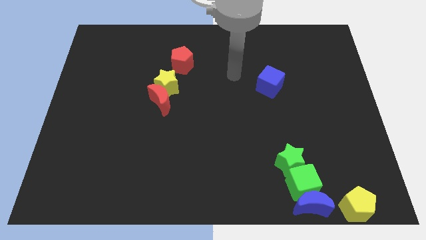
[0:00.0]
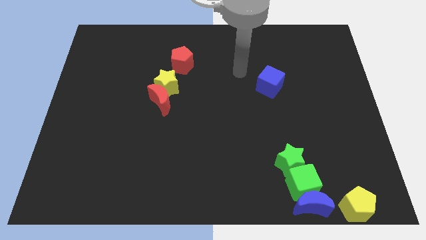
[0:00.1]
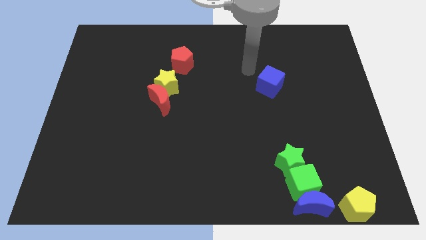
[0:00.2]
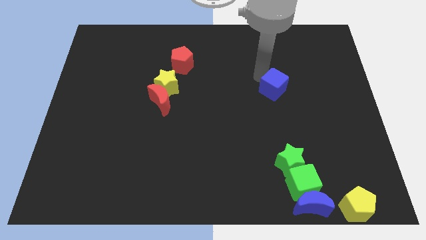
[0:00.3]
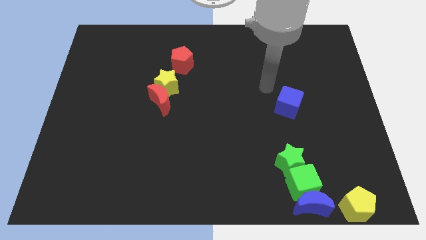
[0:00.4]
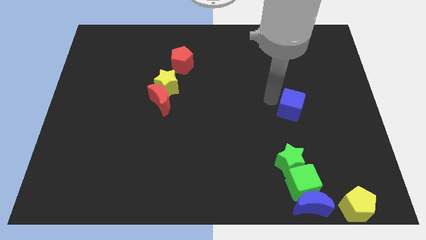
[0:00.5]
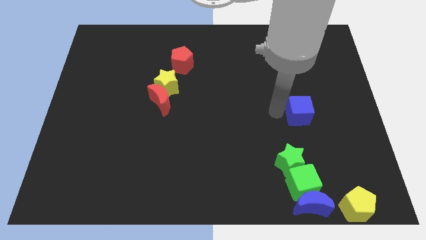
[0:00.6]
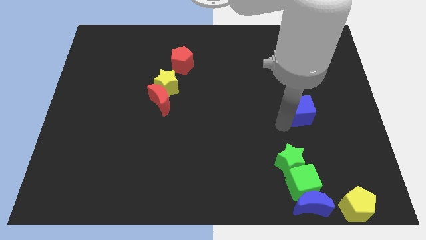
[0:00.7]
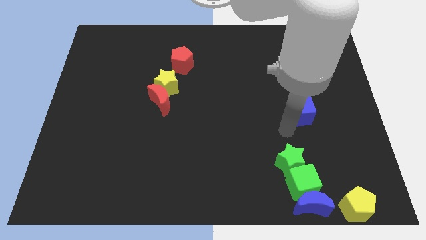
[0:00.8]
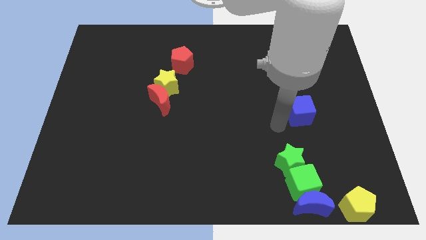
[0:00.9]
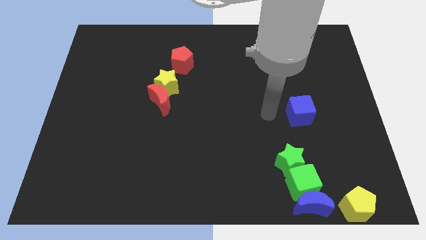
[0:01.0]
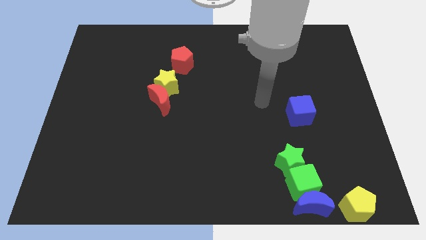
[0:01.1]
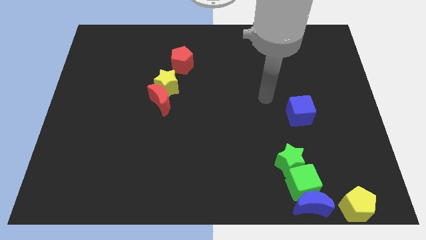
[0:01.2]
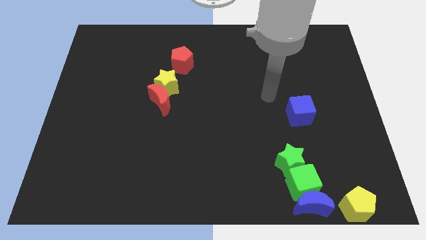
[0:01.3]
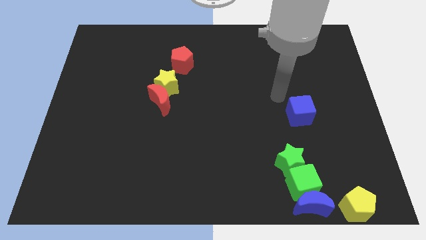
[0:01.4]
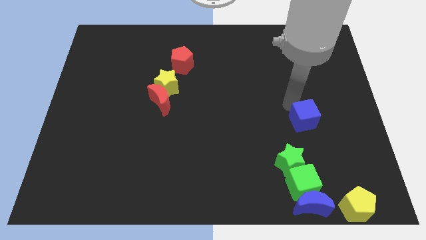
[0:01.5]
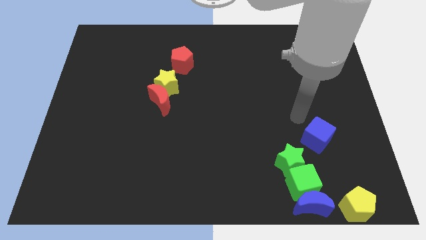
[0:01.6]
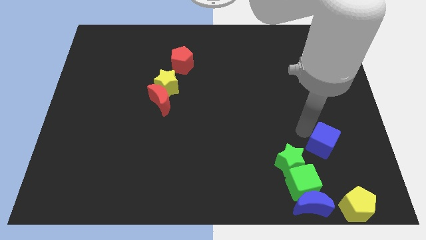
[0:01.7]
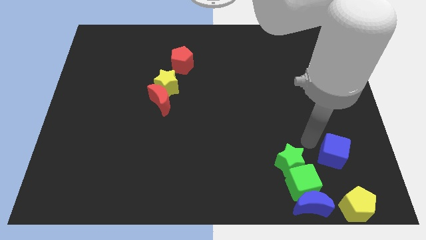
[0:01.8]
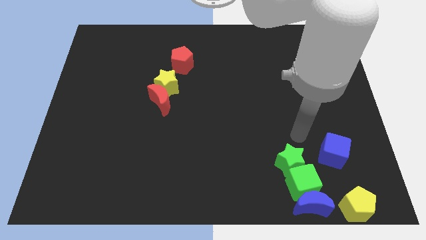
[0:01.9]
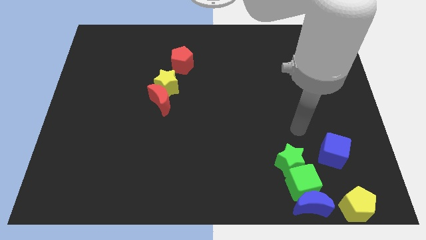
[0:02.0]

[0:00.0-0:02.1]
place the blue cube parallel right to the green star

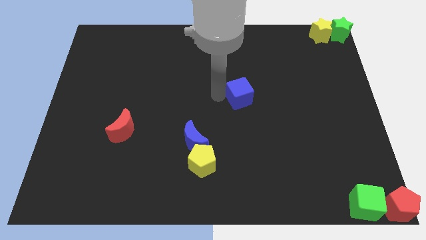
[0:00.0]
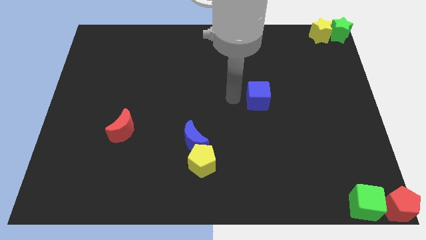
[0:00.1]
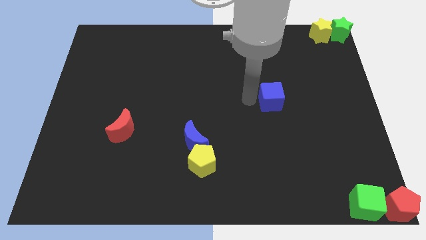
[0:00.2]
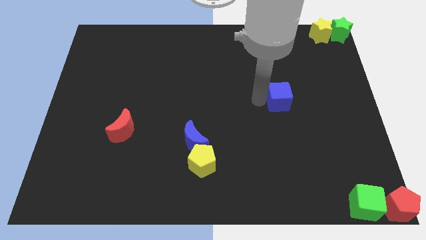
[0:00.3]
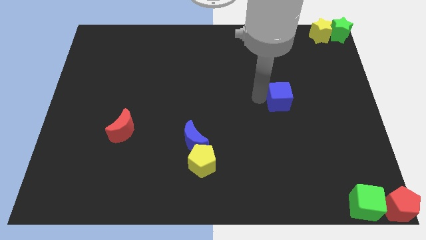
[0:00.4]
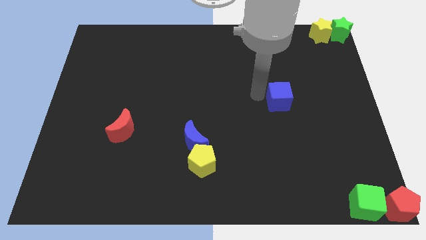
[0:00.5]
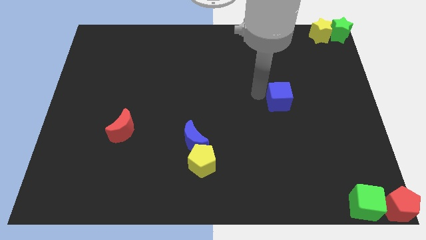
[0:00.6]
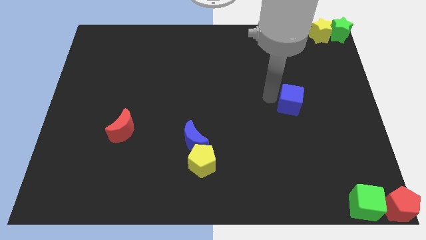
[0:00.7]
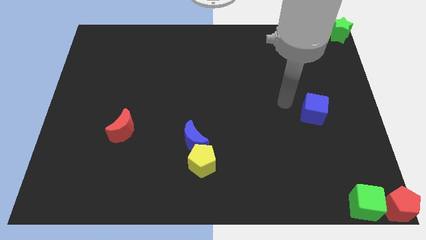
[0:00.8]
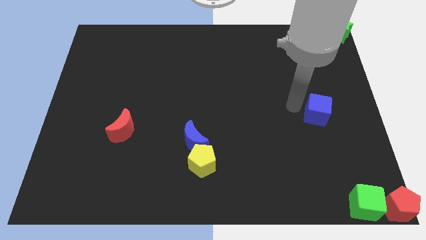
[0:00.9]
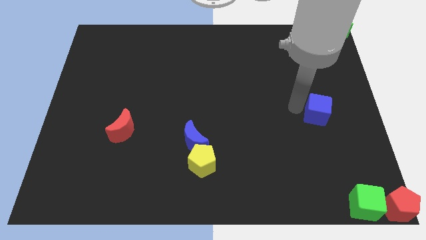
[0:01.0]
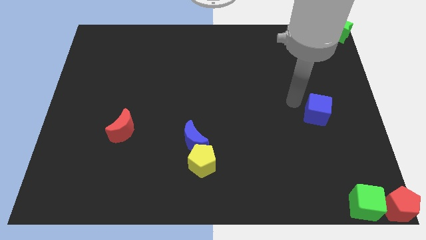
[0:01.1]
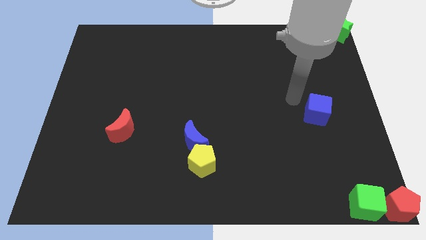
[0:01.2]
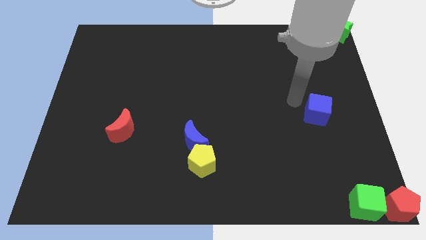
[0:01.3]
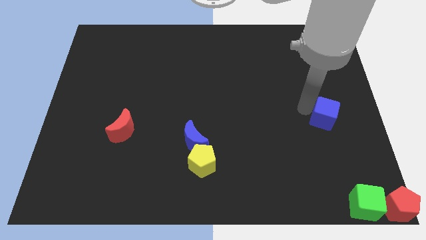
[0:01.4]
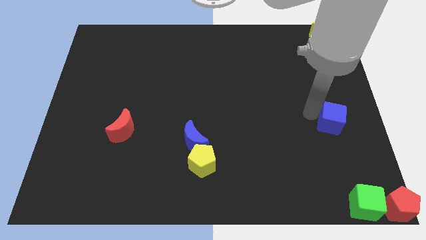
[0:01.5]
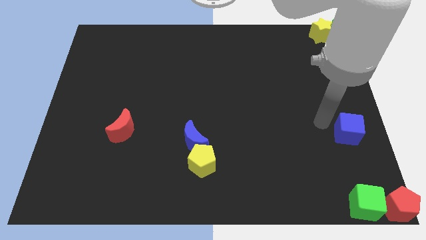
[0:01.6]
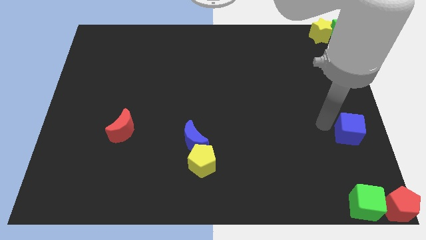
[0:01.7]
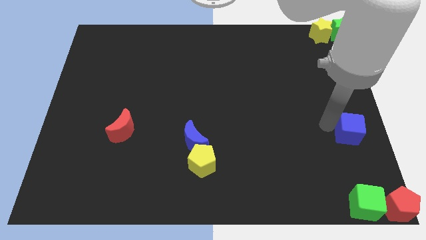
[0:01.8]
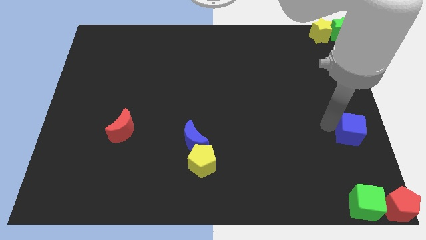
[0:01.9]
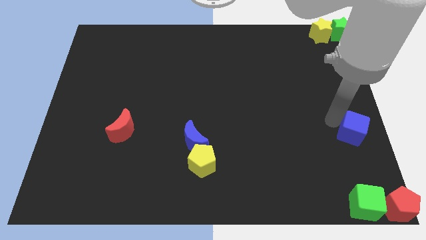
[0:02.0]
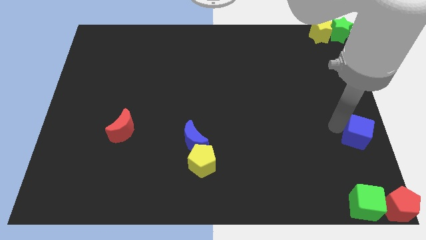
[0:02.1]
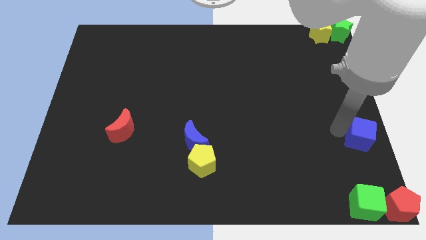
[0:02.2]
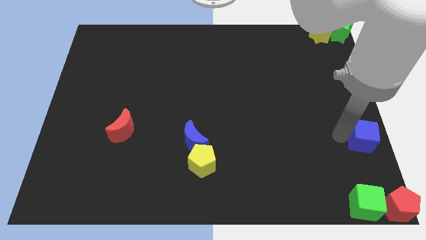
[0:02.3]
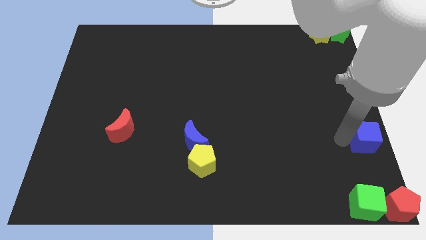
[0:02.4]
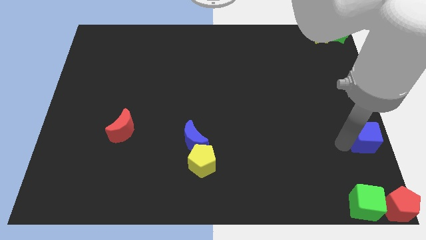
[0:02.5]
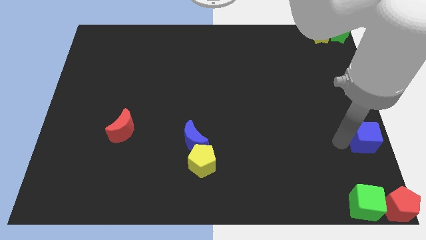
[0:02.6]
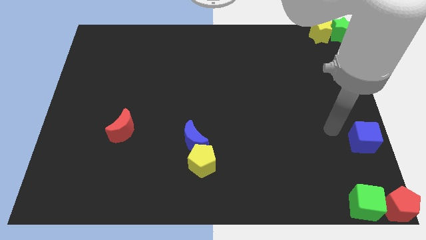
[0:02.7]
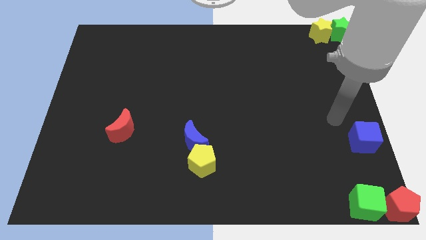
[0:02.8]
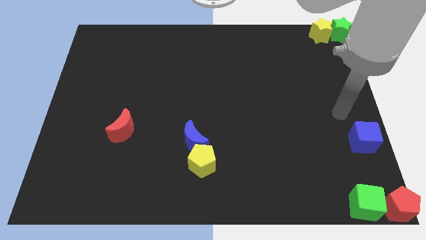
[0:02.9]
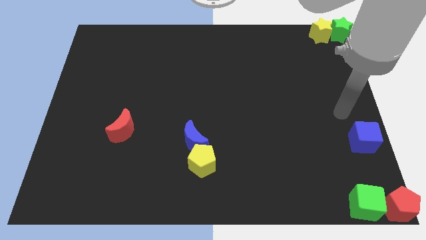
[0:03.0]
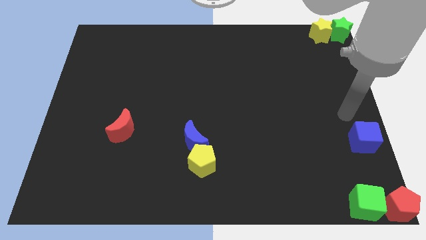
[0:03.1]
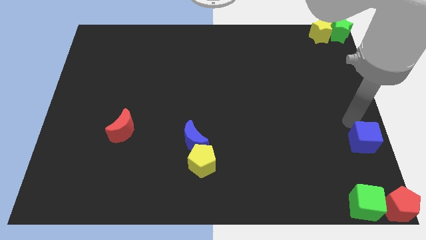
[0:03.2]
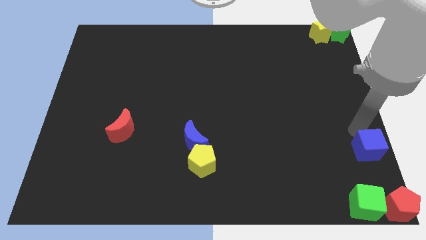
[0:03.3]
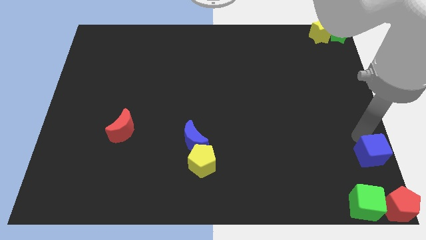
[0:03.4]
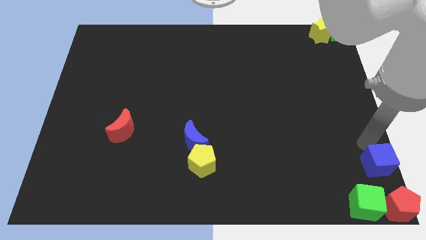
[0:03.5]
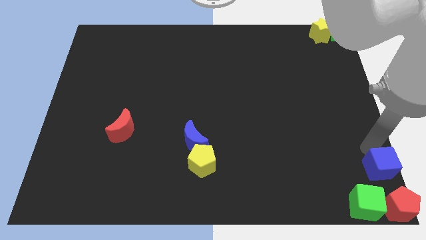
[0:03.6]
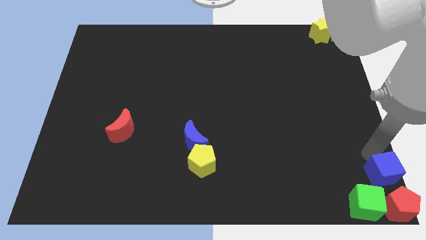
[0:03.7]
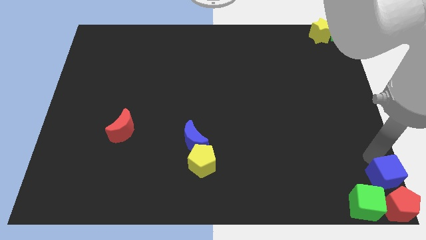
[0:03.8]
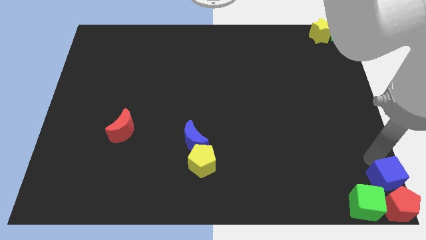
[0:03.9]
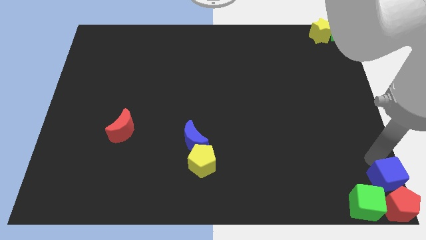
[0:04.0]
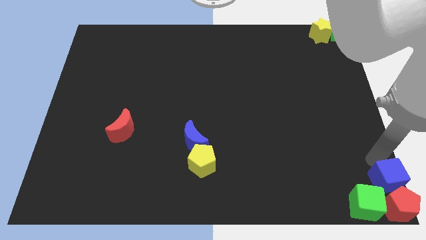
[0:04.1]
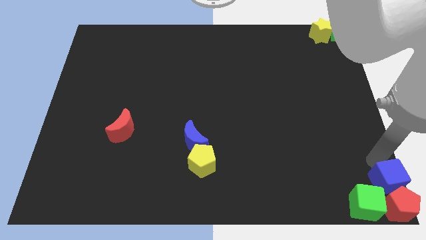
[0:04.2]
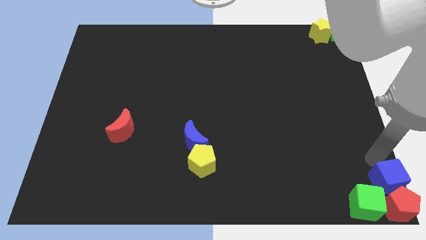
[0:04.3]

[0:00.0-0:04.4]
place the blue cube above the red pentagon

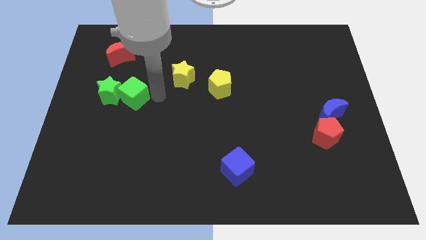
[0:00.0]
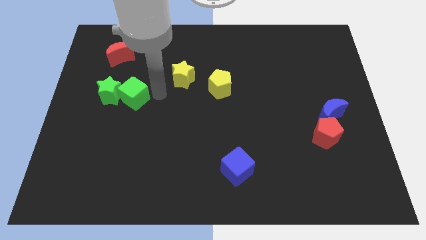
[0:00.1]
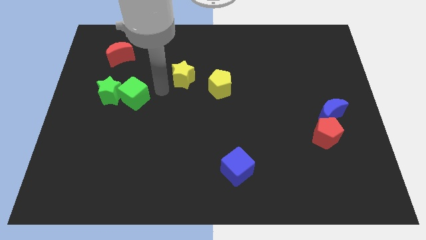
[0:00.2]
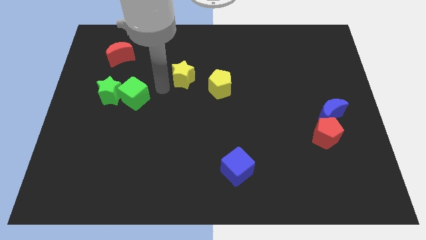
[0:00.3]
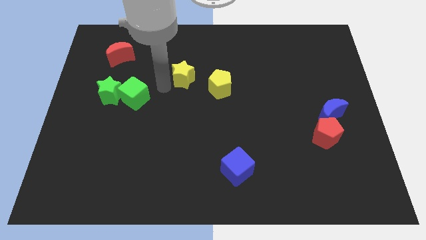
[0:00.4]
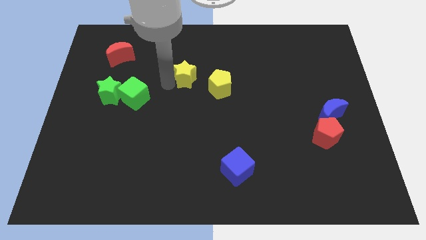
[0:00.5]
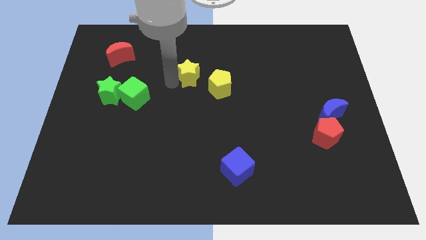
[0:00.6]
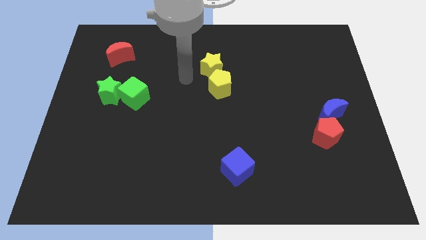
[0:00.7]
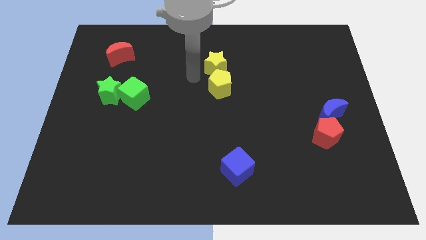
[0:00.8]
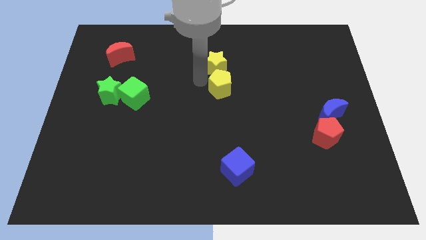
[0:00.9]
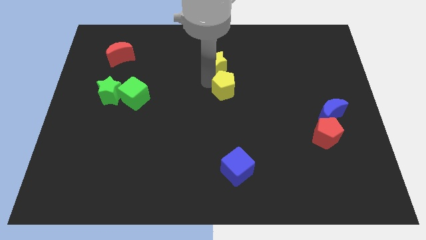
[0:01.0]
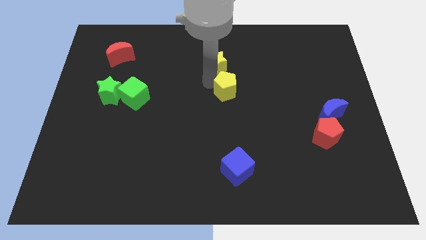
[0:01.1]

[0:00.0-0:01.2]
place the yellow star on the top of the yellow pentagon

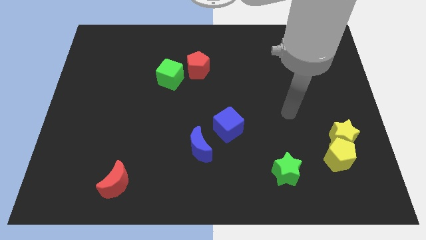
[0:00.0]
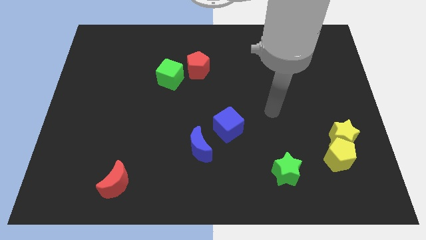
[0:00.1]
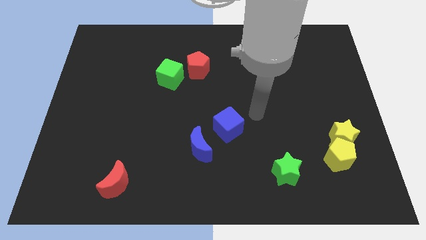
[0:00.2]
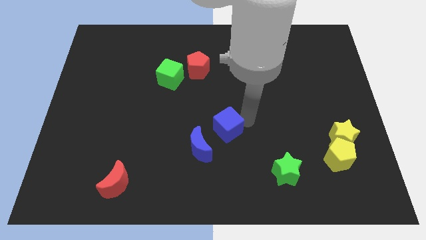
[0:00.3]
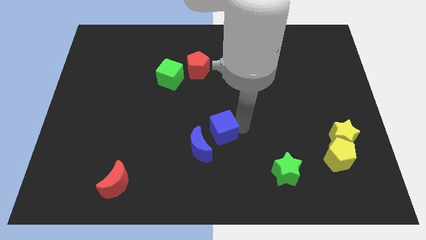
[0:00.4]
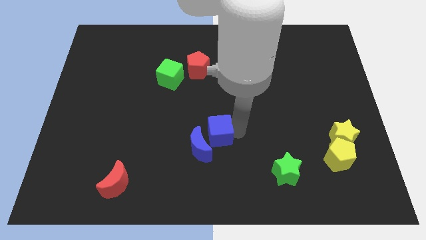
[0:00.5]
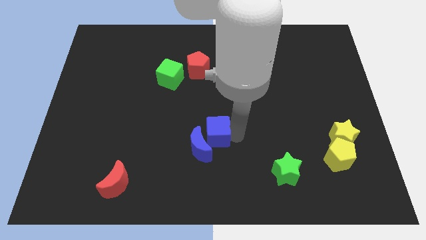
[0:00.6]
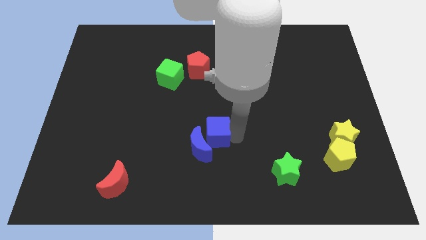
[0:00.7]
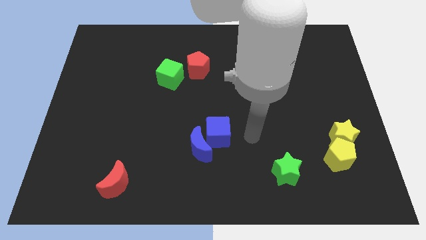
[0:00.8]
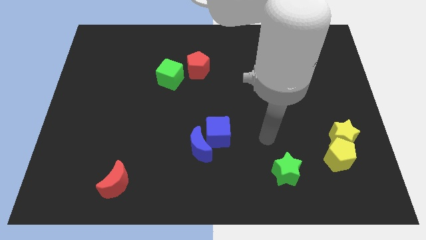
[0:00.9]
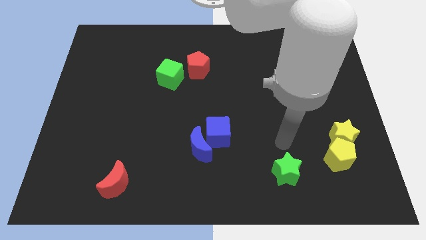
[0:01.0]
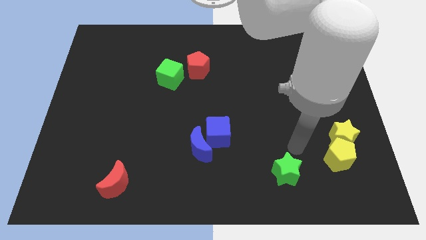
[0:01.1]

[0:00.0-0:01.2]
push the blue cube towards the blue crescent
